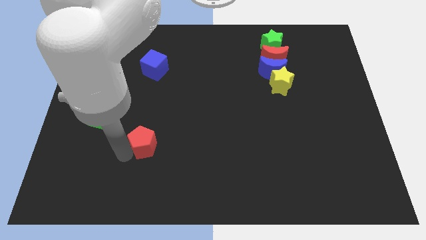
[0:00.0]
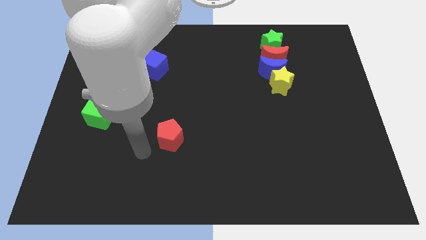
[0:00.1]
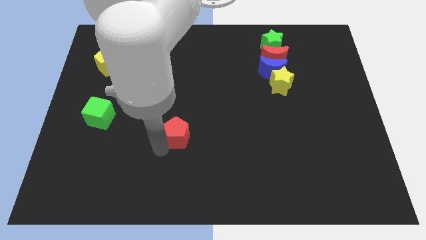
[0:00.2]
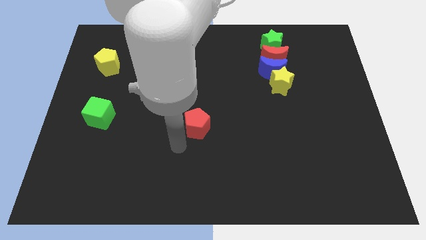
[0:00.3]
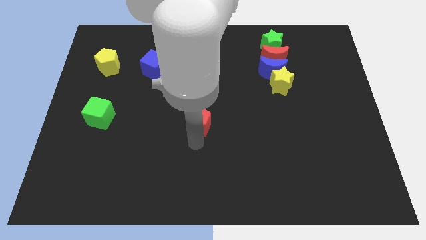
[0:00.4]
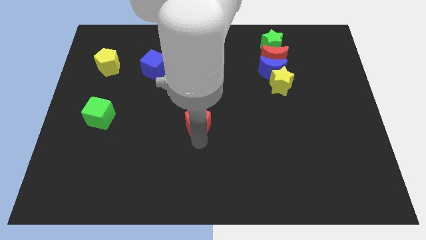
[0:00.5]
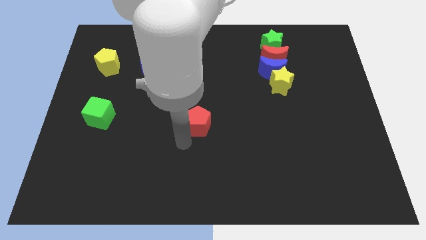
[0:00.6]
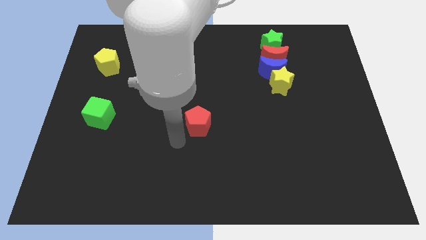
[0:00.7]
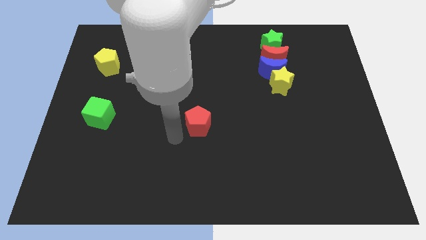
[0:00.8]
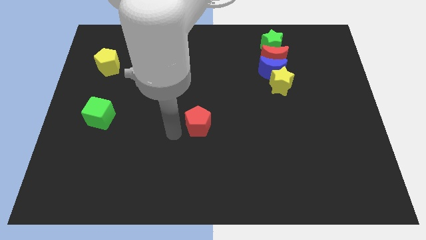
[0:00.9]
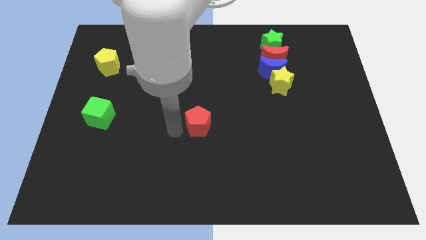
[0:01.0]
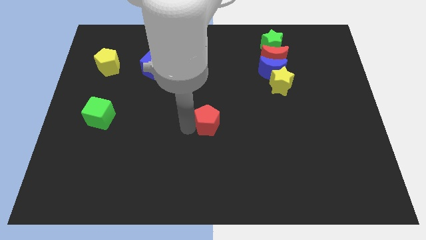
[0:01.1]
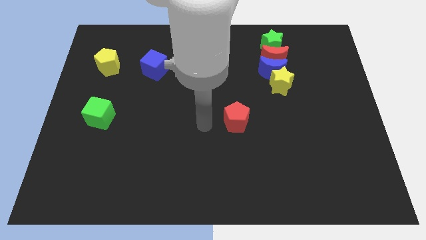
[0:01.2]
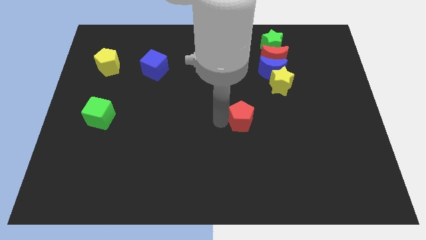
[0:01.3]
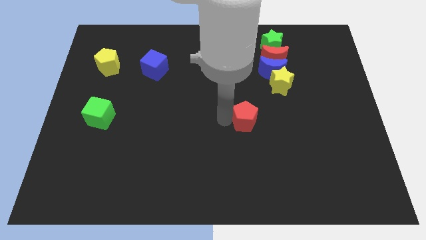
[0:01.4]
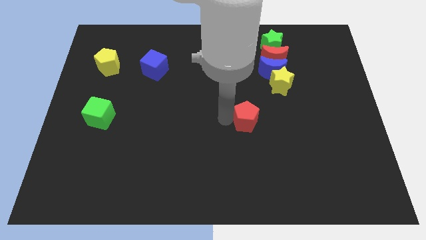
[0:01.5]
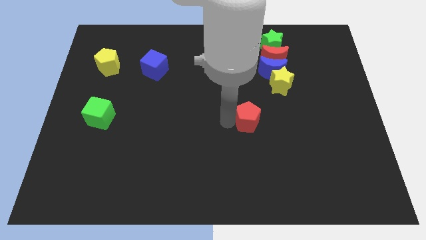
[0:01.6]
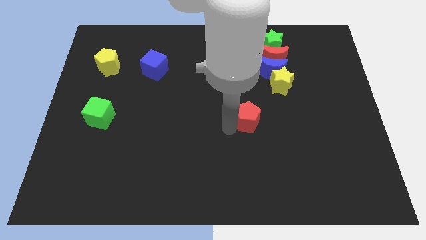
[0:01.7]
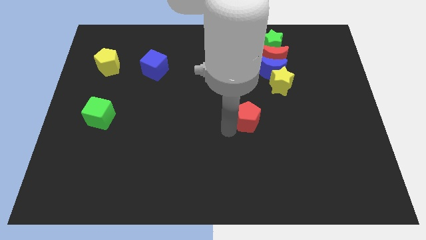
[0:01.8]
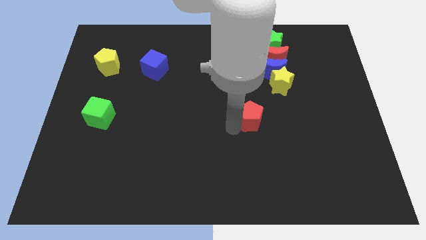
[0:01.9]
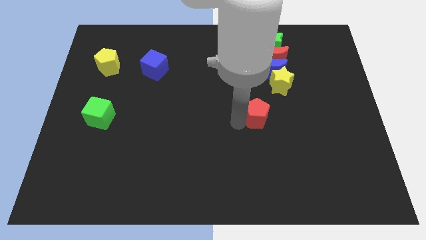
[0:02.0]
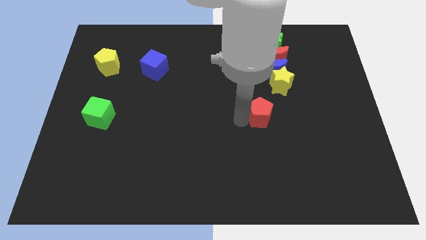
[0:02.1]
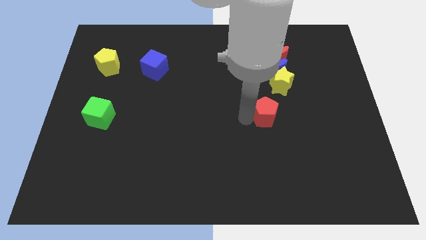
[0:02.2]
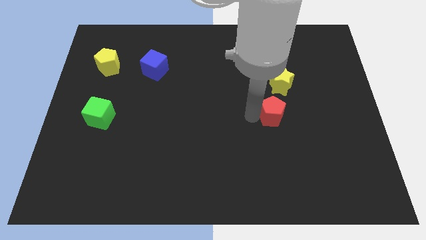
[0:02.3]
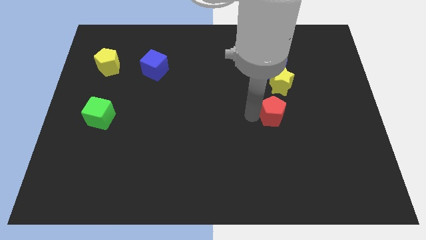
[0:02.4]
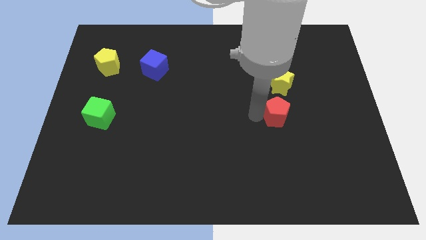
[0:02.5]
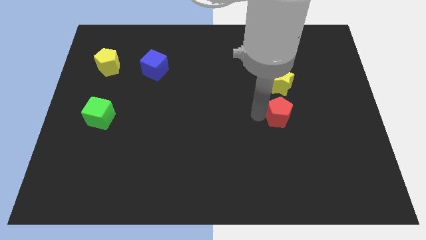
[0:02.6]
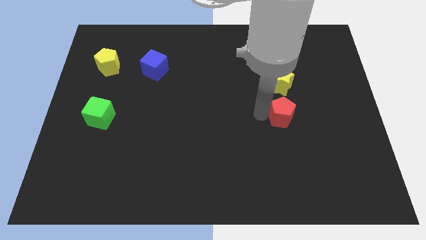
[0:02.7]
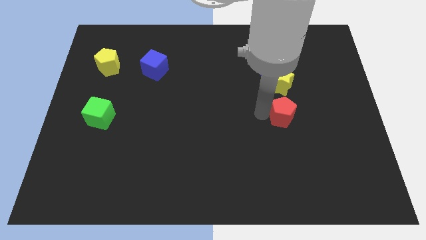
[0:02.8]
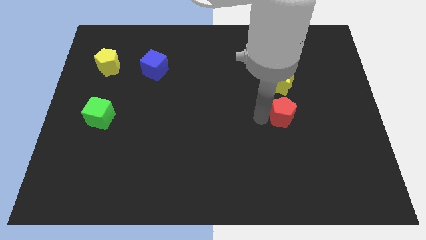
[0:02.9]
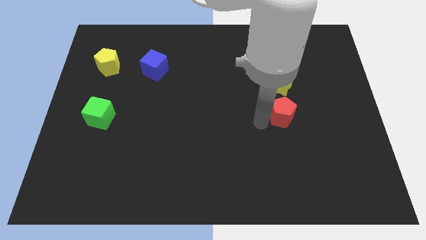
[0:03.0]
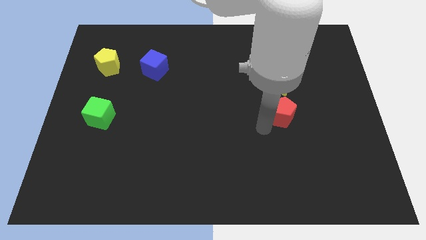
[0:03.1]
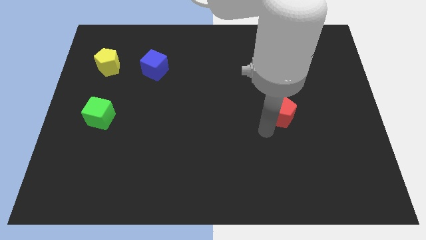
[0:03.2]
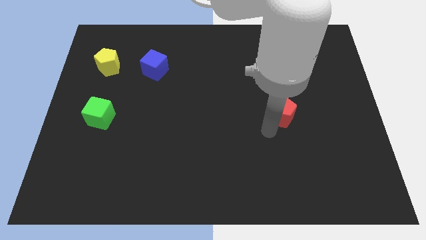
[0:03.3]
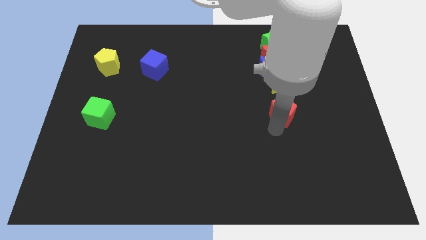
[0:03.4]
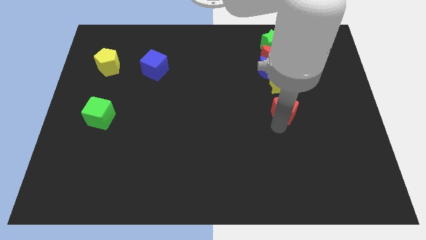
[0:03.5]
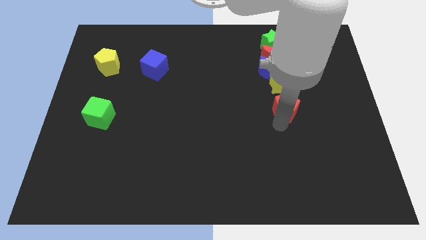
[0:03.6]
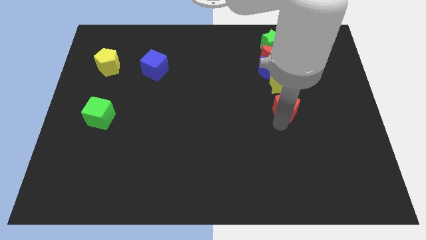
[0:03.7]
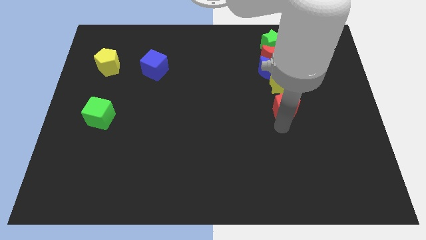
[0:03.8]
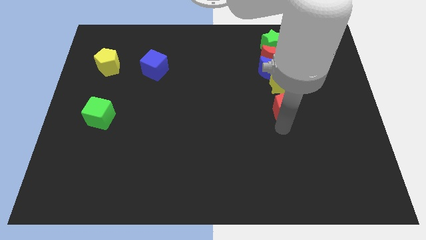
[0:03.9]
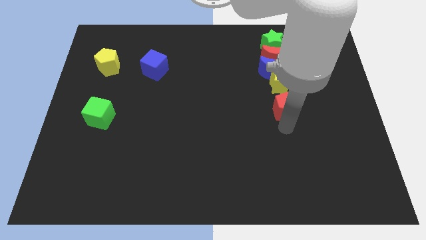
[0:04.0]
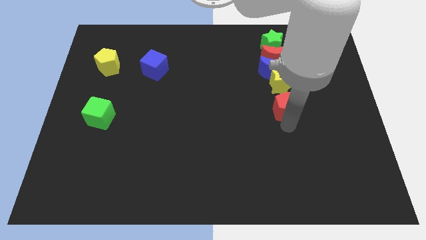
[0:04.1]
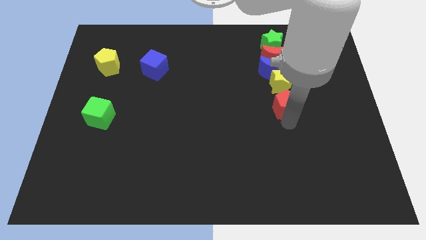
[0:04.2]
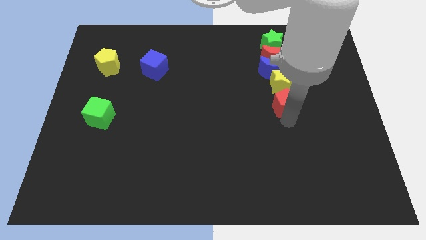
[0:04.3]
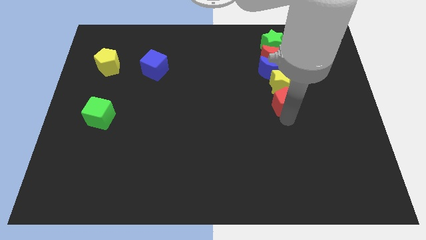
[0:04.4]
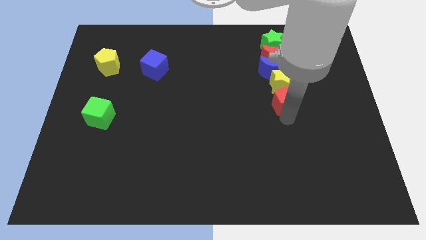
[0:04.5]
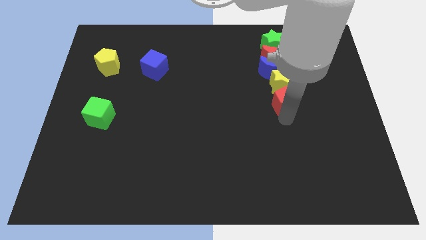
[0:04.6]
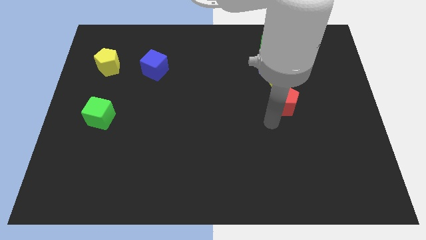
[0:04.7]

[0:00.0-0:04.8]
place red pentagon below the yellow star

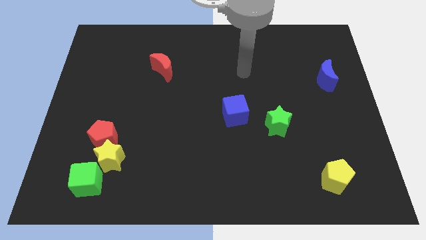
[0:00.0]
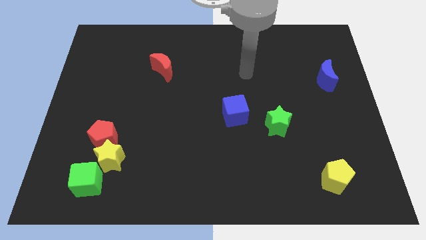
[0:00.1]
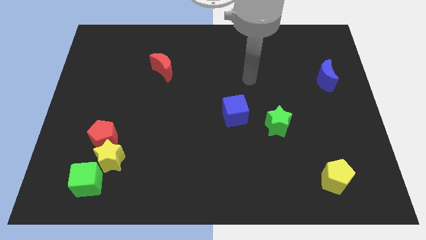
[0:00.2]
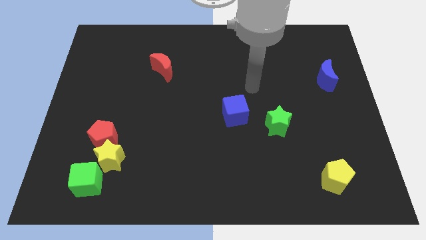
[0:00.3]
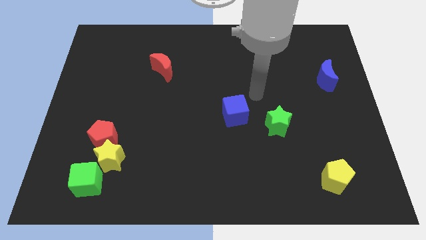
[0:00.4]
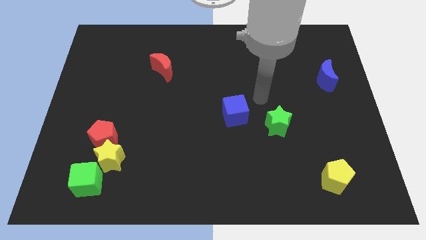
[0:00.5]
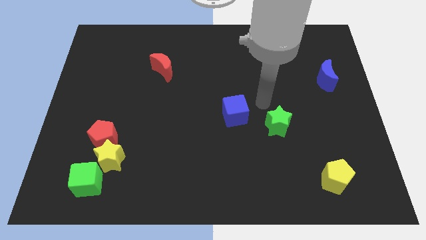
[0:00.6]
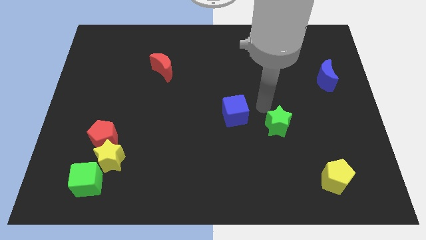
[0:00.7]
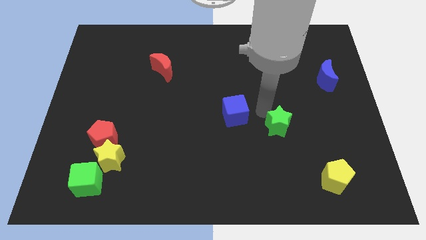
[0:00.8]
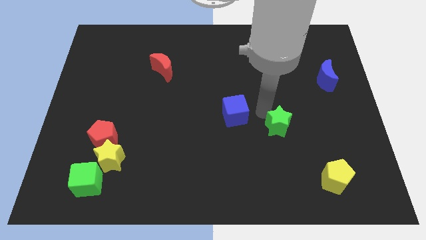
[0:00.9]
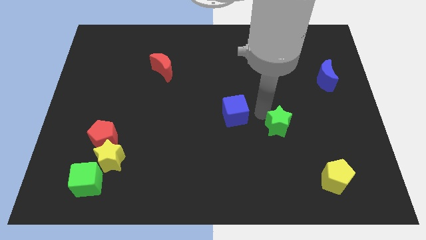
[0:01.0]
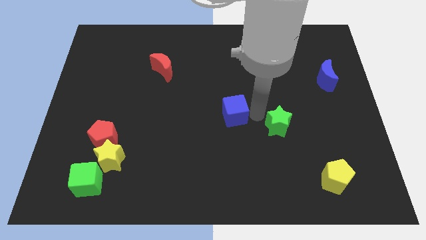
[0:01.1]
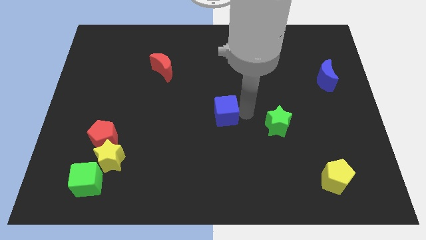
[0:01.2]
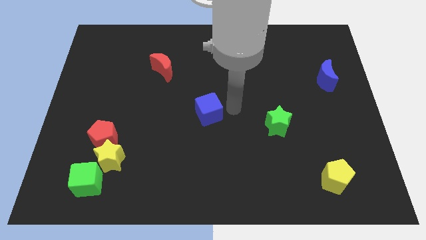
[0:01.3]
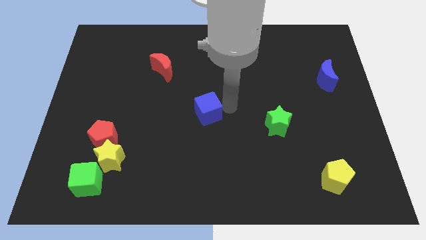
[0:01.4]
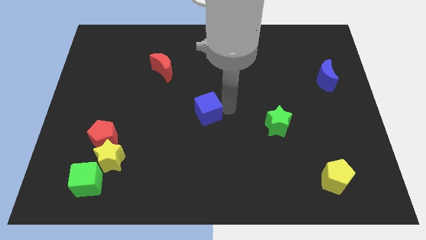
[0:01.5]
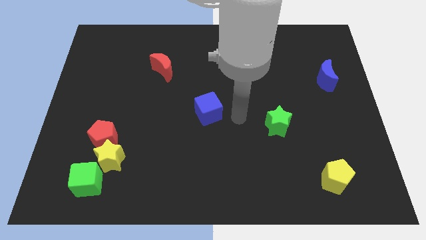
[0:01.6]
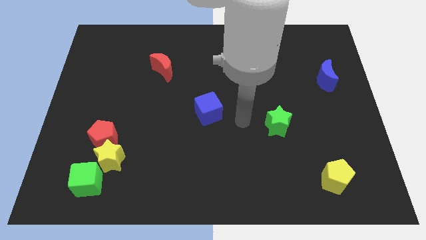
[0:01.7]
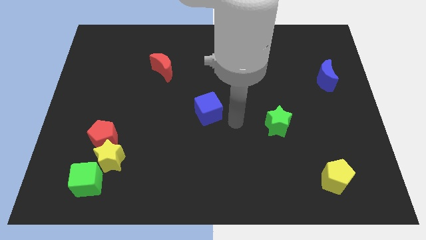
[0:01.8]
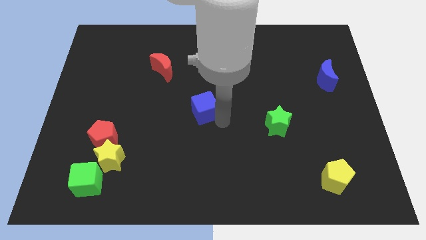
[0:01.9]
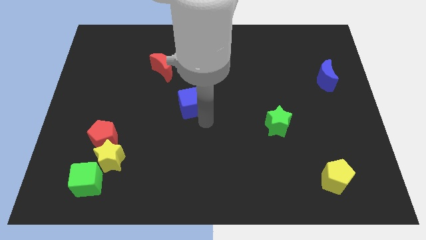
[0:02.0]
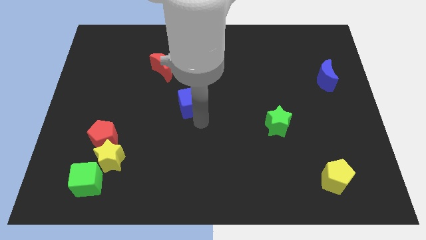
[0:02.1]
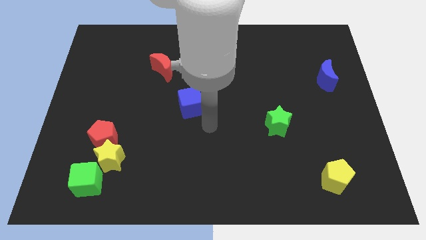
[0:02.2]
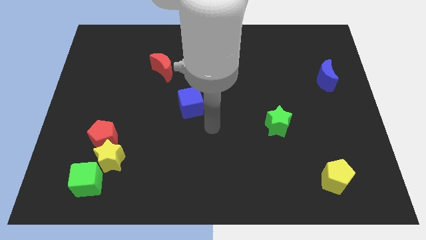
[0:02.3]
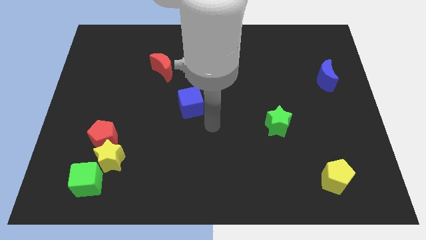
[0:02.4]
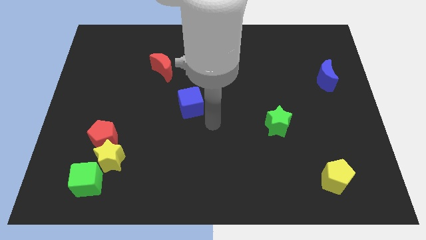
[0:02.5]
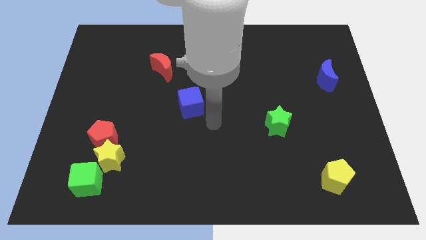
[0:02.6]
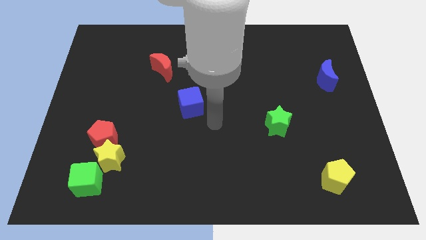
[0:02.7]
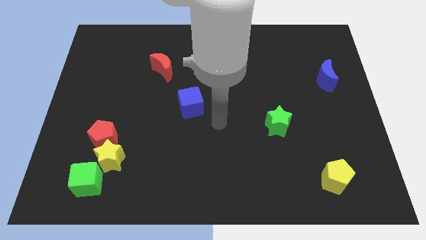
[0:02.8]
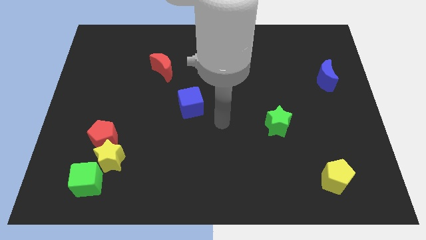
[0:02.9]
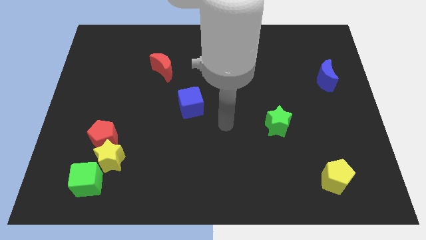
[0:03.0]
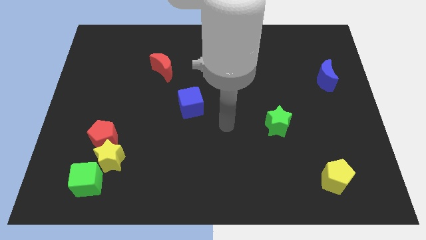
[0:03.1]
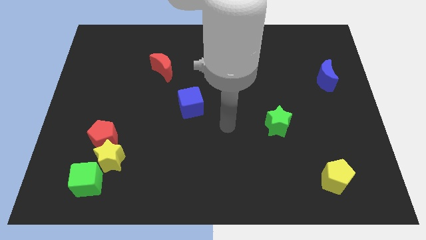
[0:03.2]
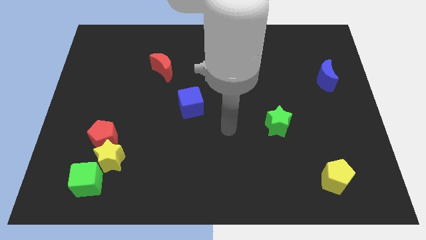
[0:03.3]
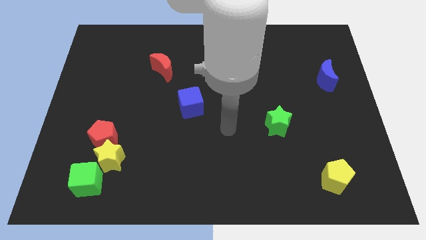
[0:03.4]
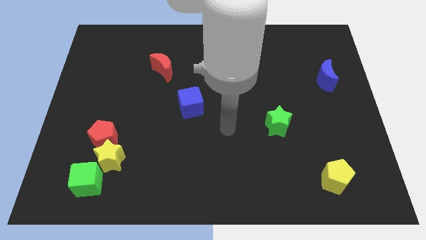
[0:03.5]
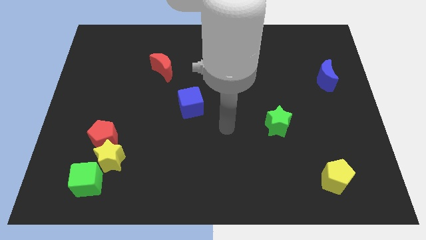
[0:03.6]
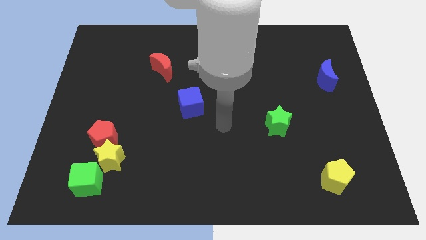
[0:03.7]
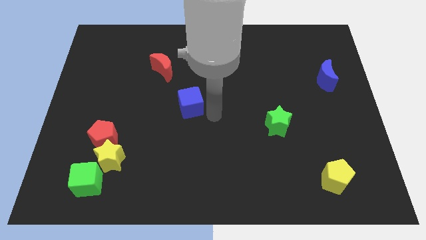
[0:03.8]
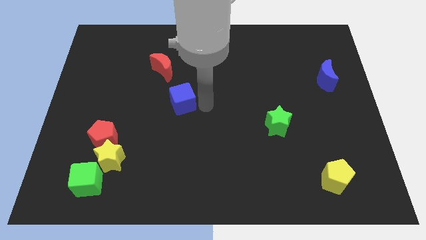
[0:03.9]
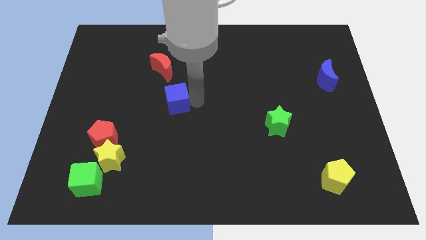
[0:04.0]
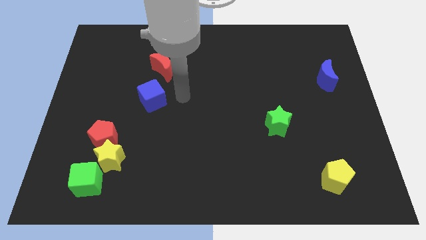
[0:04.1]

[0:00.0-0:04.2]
push the blue cube towards the bottom of the red crescent

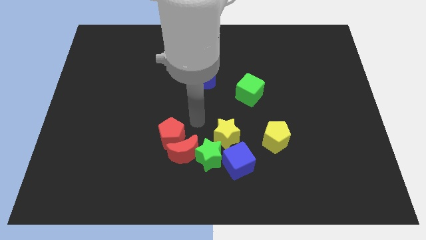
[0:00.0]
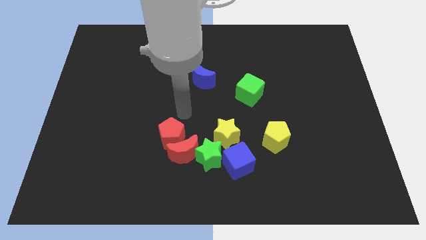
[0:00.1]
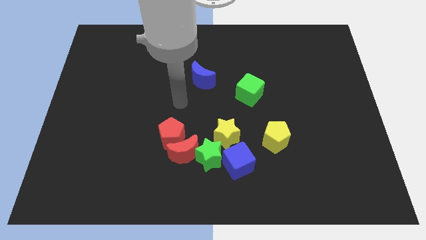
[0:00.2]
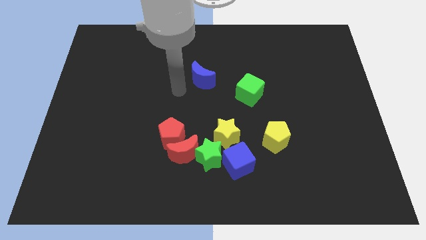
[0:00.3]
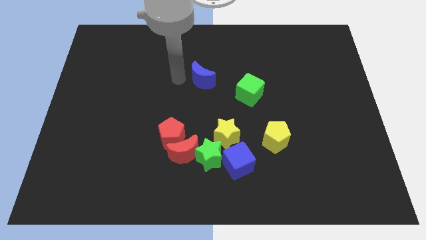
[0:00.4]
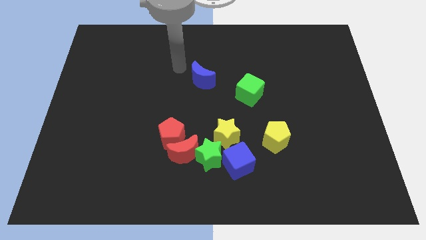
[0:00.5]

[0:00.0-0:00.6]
move your arm towards the left of the blue crescent
